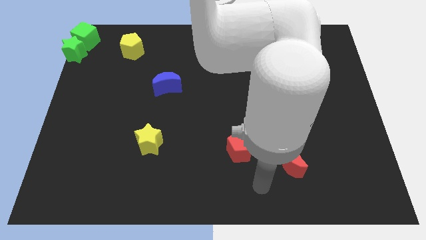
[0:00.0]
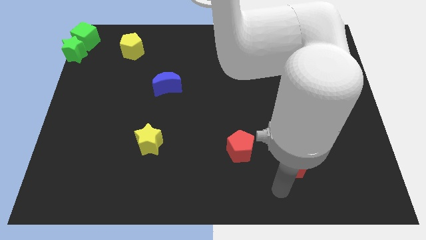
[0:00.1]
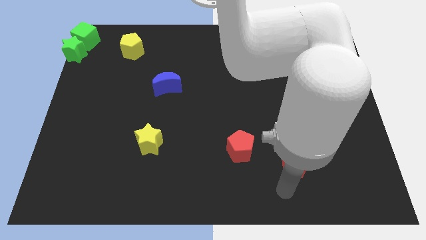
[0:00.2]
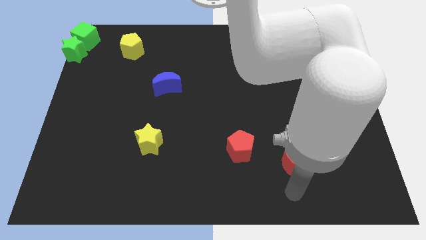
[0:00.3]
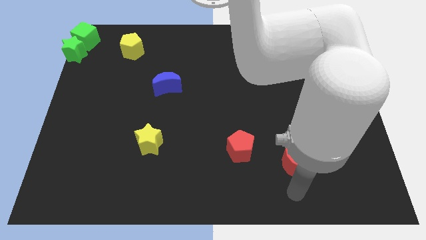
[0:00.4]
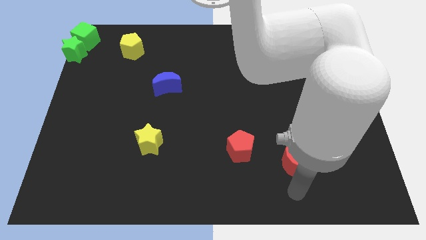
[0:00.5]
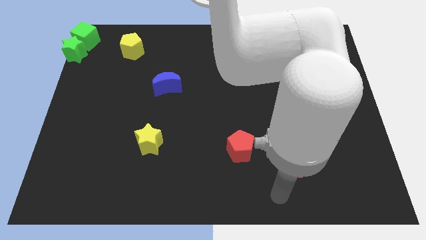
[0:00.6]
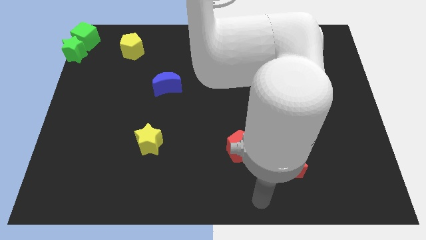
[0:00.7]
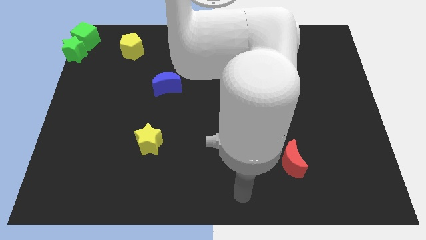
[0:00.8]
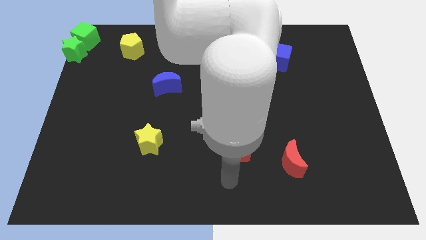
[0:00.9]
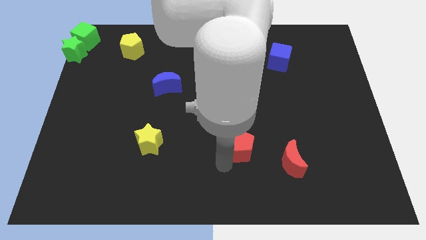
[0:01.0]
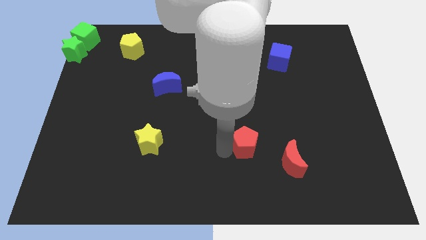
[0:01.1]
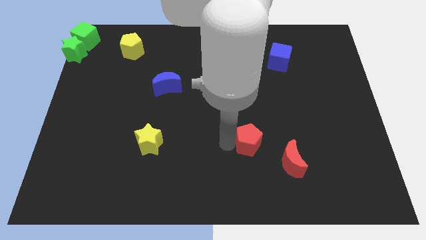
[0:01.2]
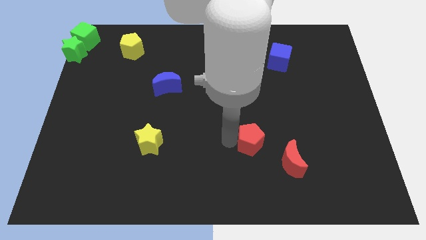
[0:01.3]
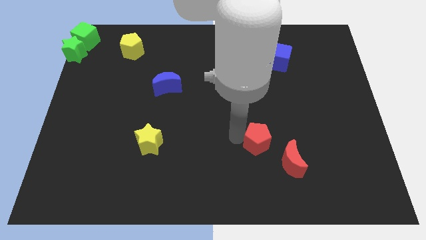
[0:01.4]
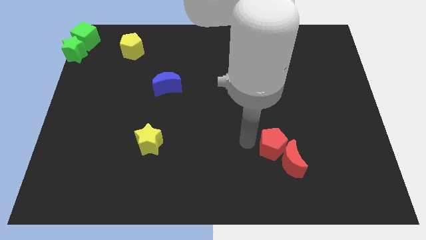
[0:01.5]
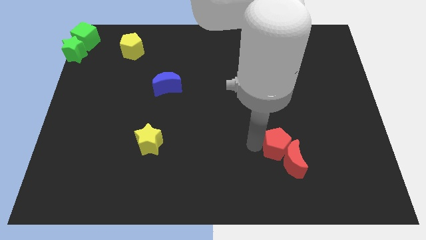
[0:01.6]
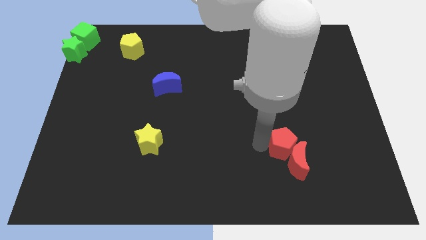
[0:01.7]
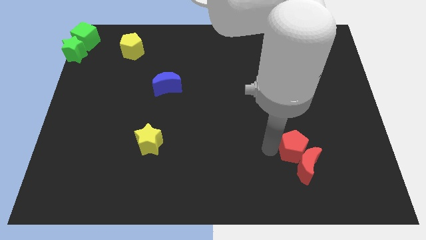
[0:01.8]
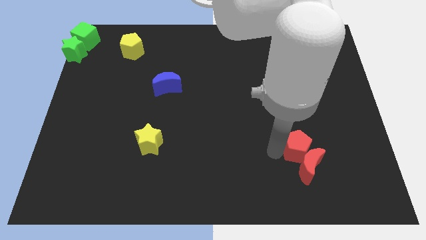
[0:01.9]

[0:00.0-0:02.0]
push the red pentagon into the left of the red crescent

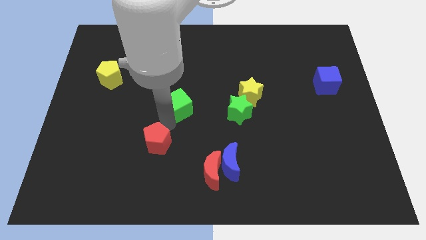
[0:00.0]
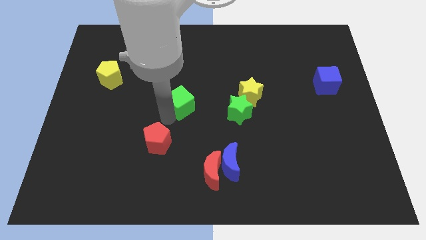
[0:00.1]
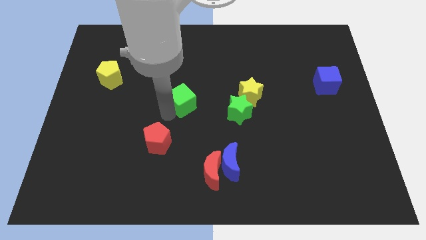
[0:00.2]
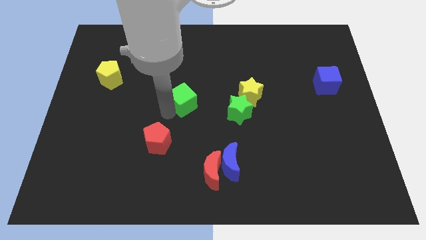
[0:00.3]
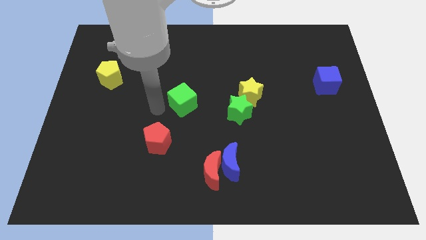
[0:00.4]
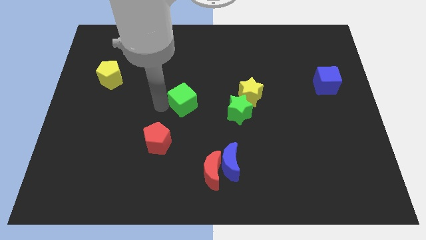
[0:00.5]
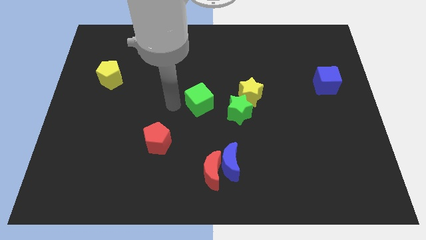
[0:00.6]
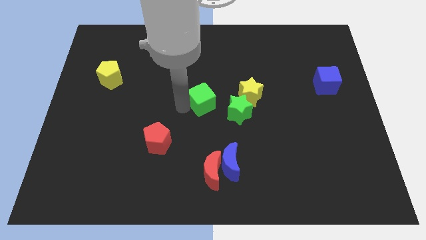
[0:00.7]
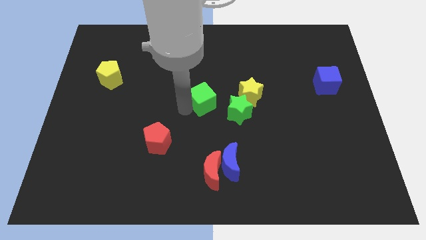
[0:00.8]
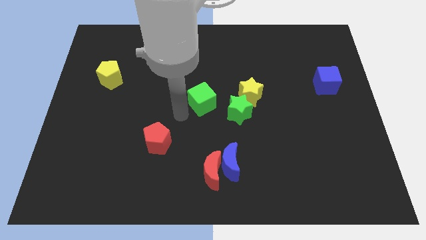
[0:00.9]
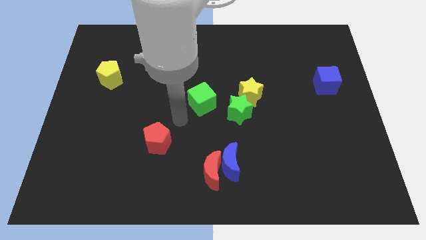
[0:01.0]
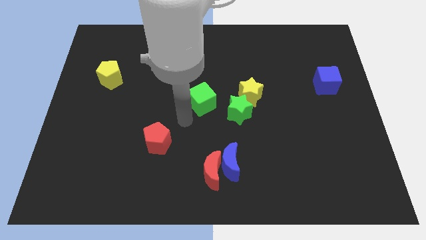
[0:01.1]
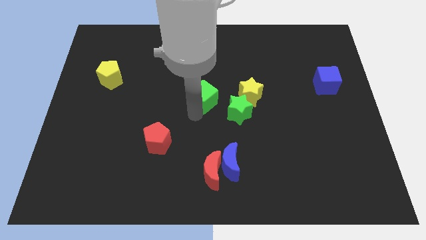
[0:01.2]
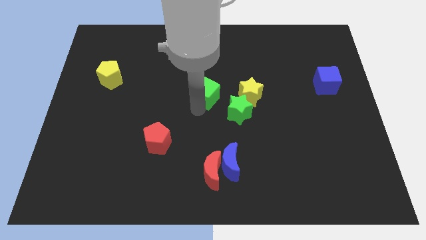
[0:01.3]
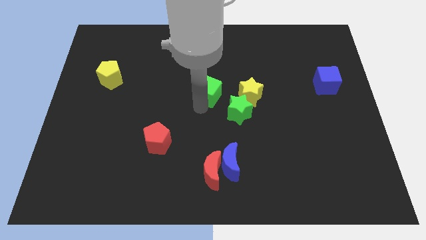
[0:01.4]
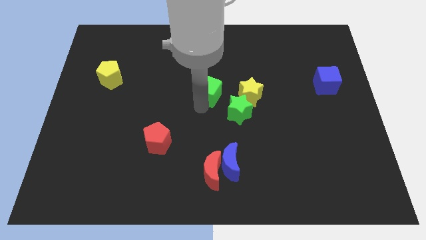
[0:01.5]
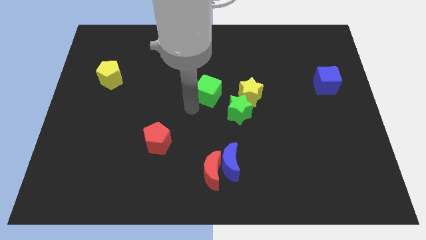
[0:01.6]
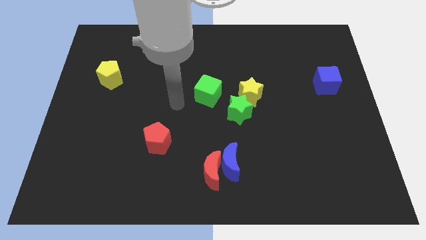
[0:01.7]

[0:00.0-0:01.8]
push the green cube at the left side of the green and yellow stars

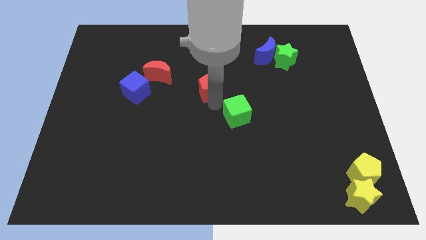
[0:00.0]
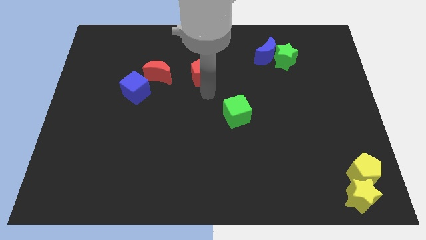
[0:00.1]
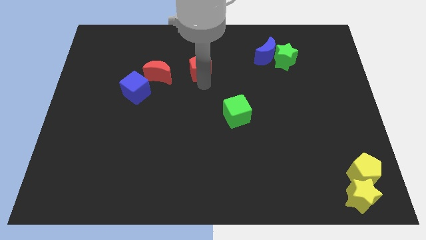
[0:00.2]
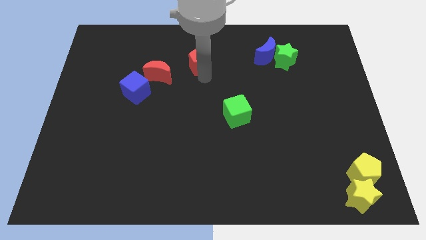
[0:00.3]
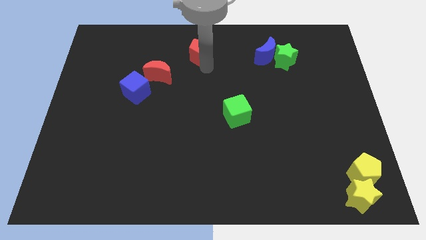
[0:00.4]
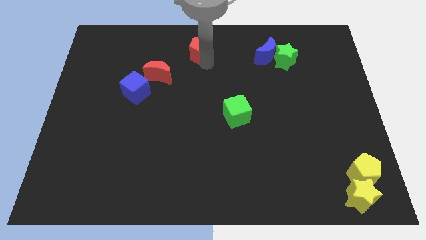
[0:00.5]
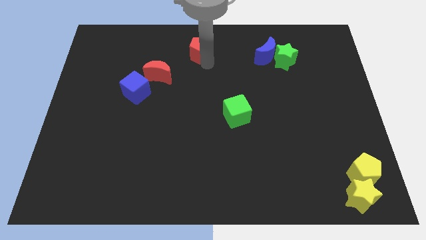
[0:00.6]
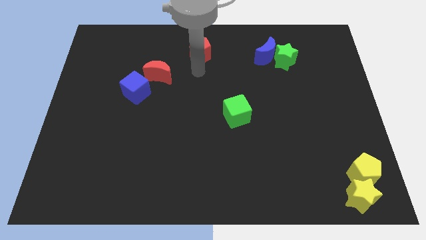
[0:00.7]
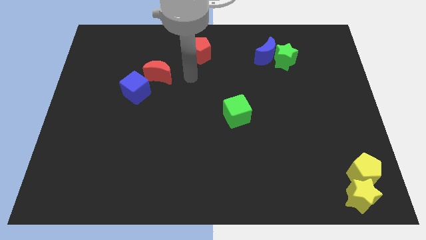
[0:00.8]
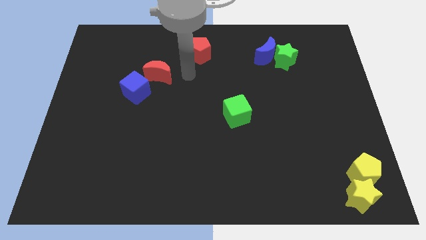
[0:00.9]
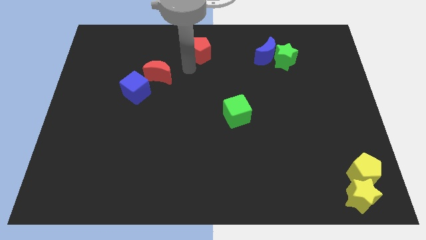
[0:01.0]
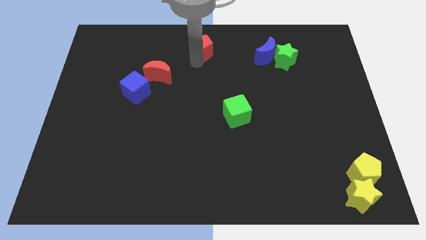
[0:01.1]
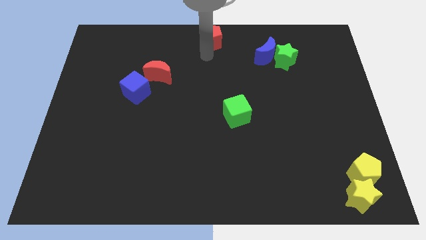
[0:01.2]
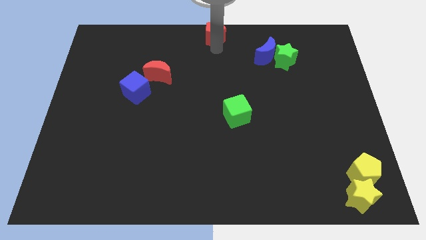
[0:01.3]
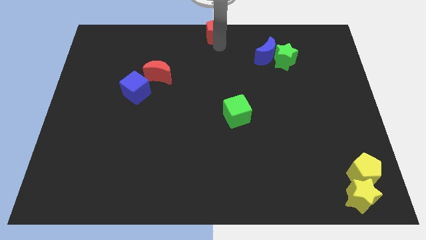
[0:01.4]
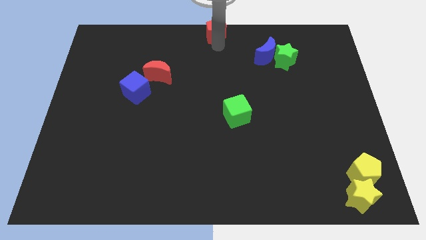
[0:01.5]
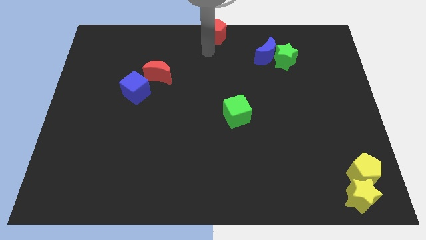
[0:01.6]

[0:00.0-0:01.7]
move the red pentagon to the top center of the board

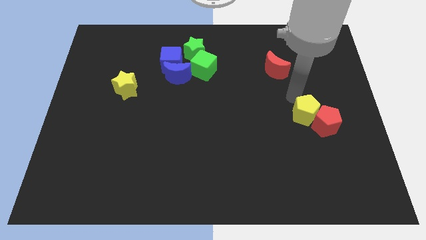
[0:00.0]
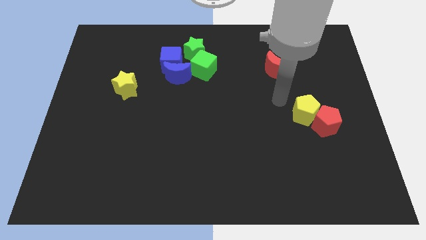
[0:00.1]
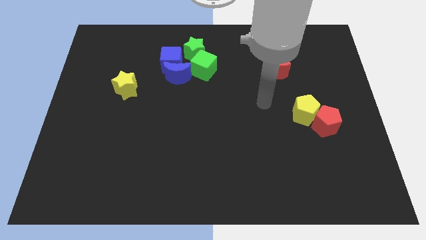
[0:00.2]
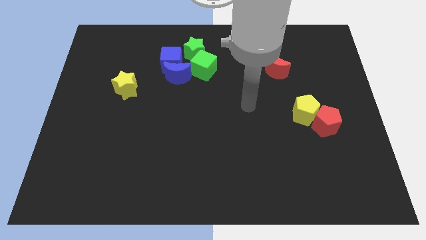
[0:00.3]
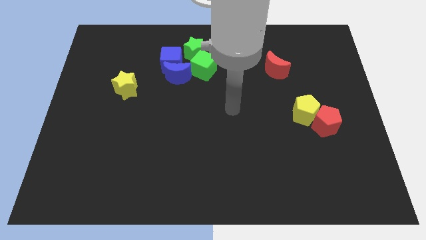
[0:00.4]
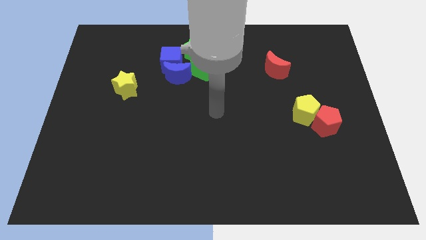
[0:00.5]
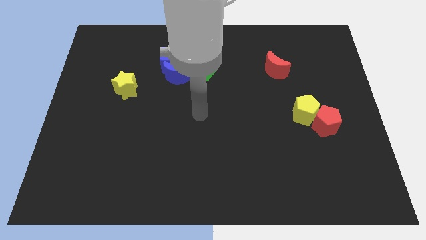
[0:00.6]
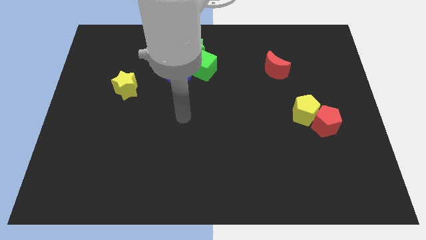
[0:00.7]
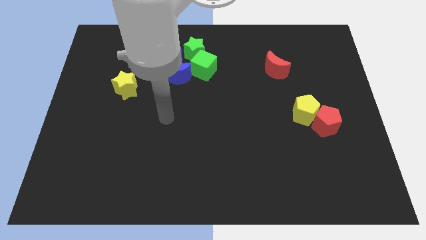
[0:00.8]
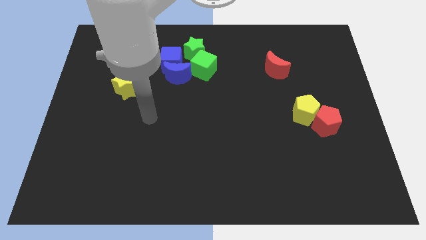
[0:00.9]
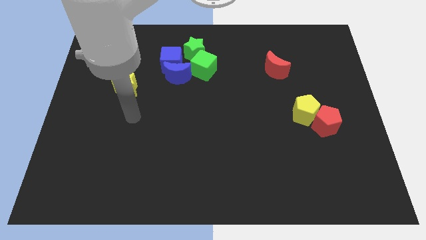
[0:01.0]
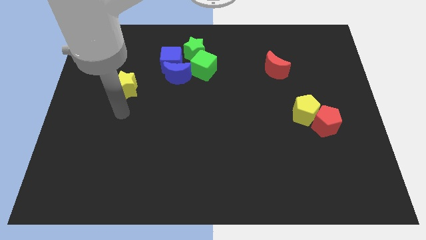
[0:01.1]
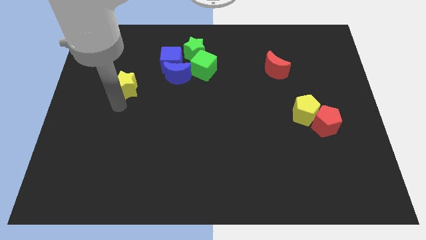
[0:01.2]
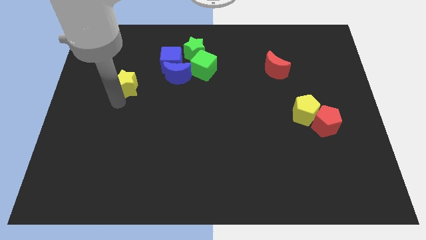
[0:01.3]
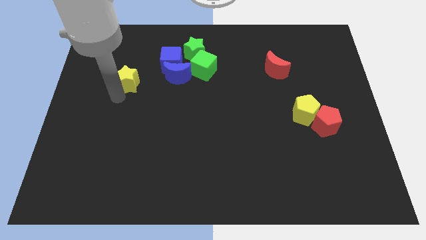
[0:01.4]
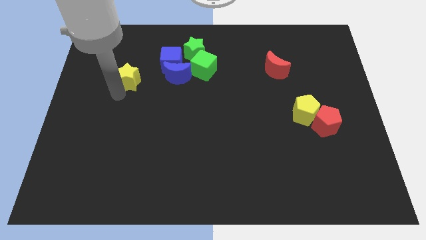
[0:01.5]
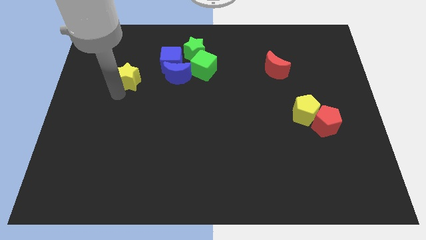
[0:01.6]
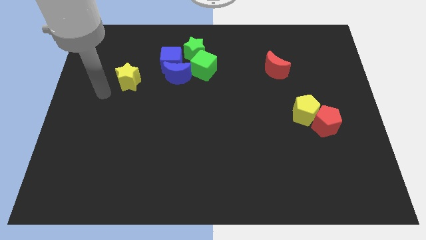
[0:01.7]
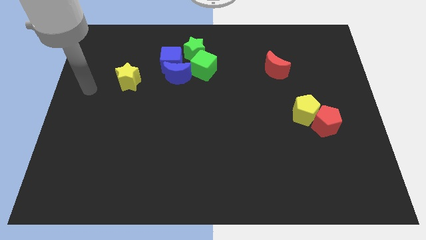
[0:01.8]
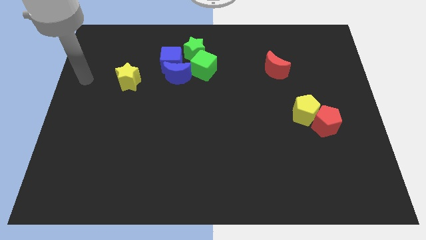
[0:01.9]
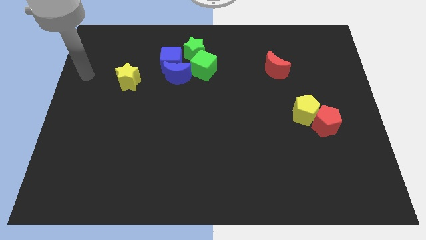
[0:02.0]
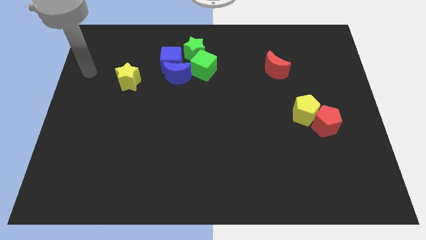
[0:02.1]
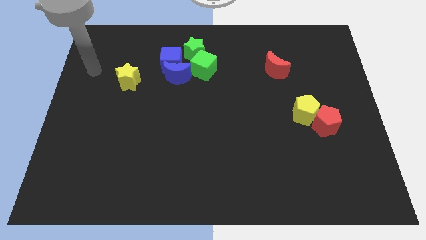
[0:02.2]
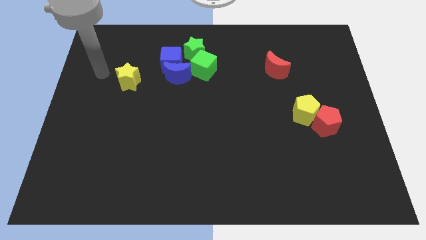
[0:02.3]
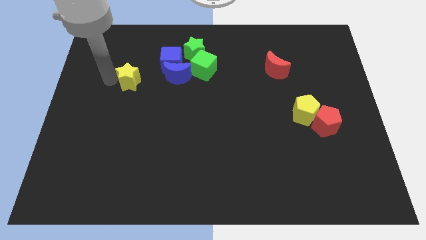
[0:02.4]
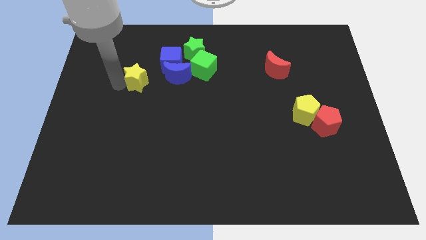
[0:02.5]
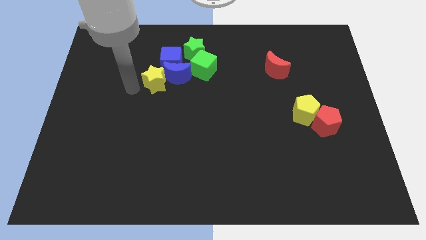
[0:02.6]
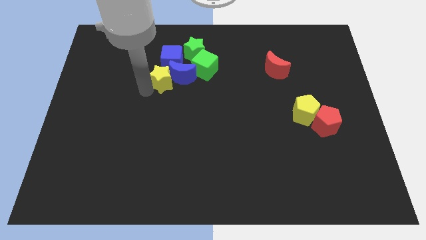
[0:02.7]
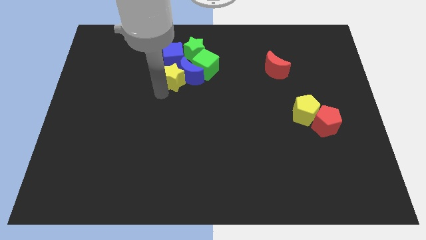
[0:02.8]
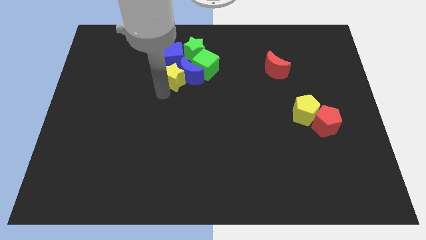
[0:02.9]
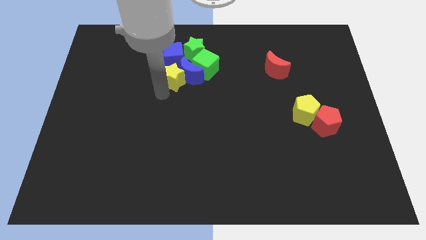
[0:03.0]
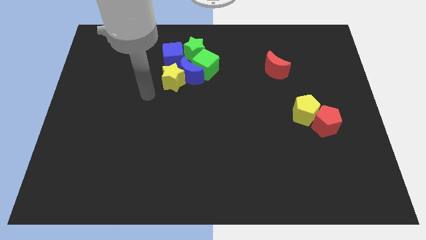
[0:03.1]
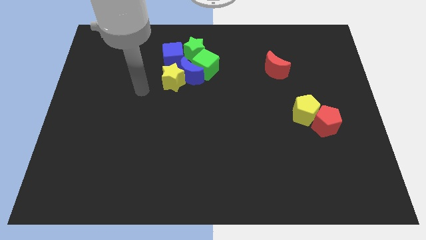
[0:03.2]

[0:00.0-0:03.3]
push the yellow star into the group of blue blocks
